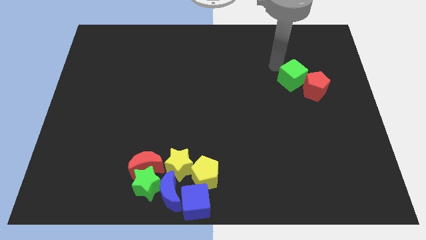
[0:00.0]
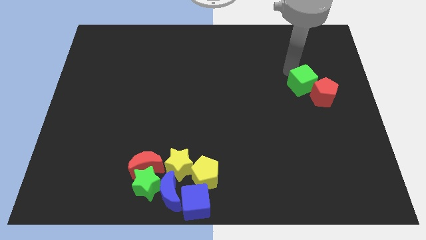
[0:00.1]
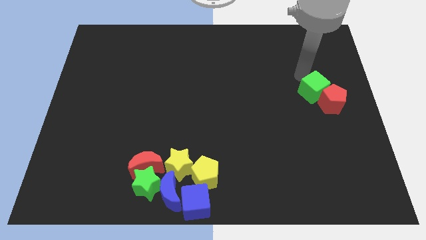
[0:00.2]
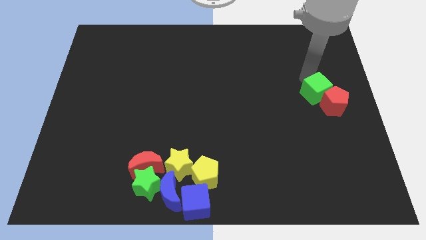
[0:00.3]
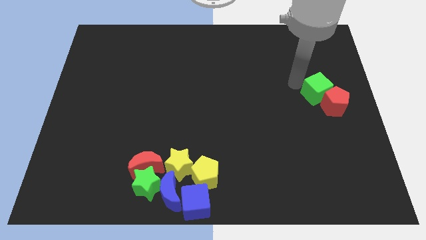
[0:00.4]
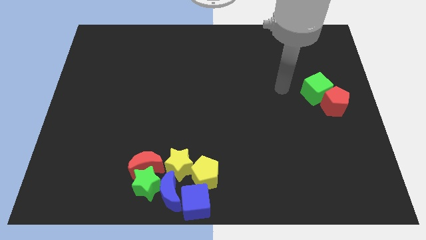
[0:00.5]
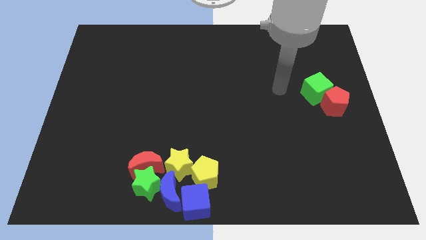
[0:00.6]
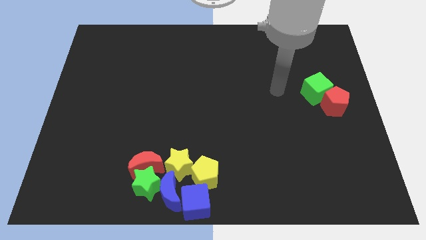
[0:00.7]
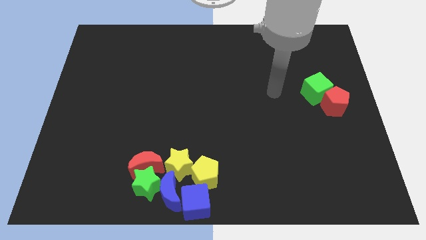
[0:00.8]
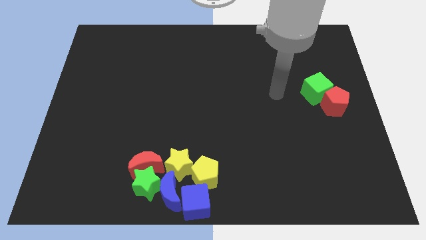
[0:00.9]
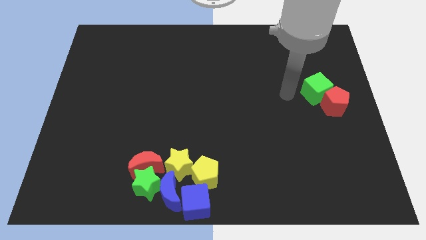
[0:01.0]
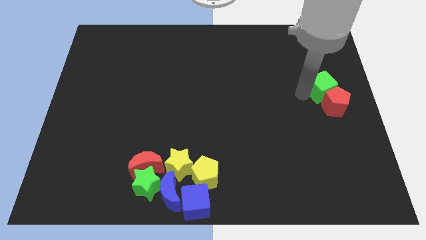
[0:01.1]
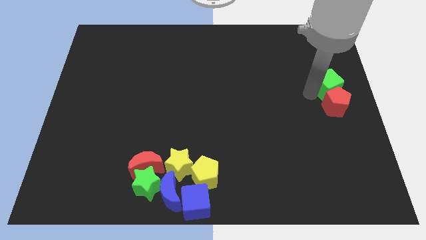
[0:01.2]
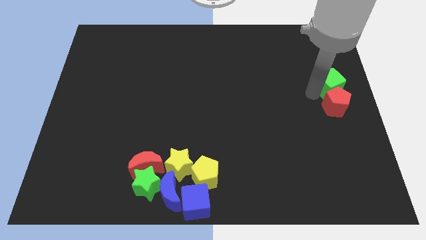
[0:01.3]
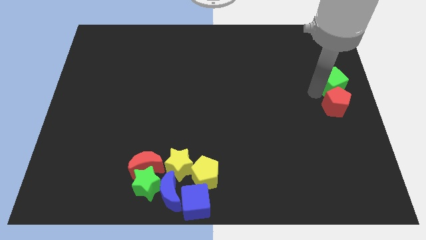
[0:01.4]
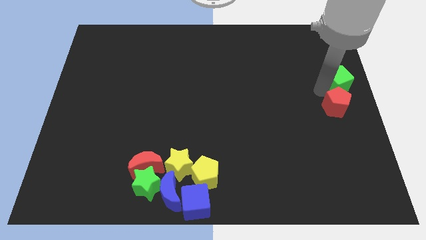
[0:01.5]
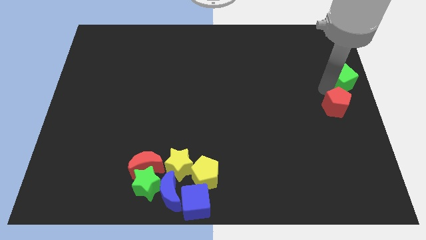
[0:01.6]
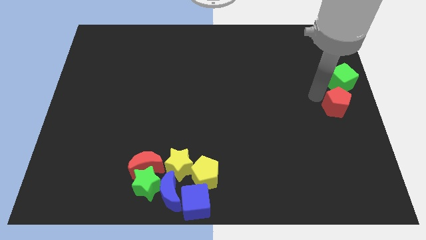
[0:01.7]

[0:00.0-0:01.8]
push the green cube towards the right center of the board

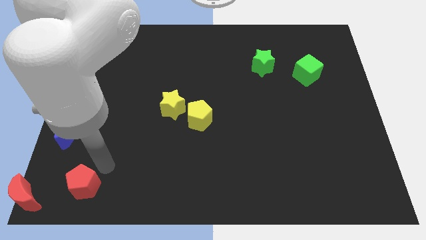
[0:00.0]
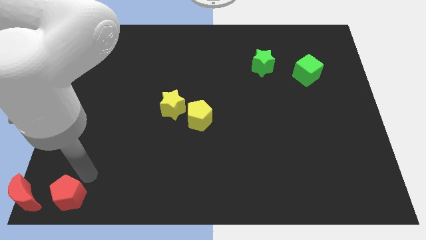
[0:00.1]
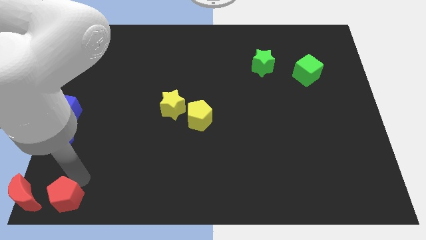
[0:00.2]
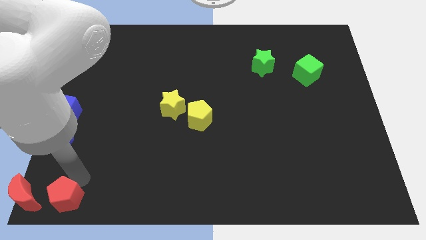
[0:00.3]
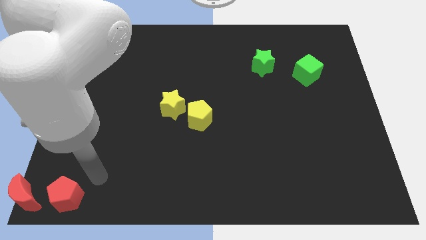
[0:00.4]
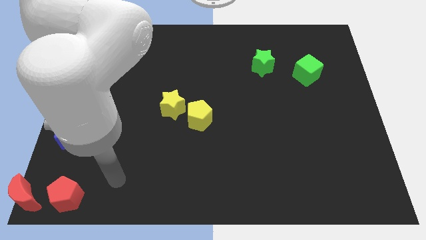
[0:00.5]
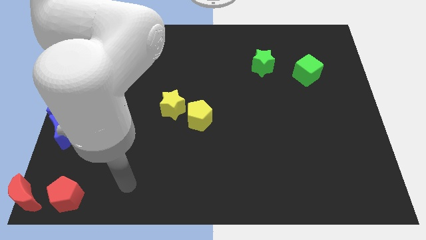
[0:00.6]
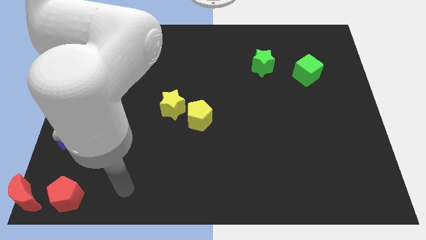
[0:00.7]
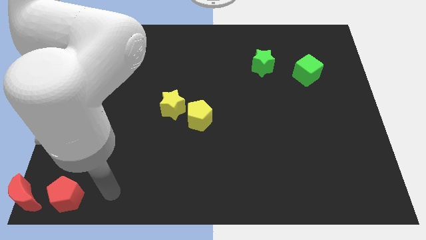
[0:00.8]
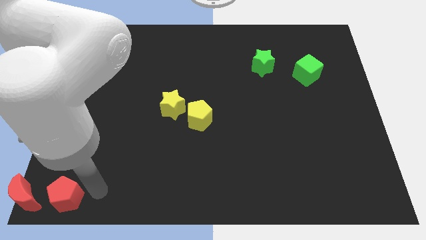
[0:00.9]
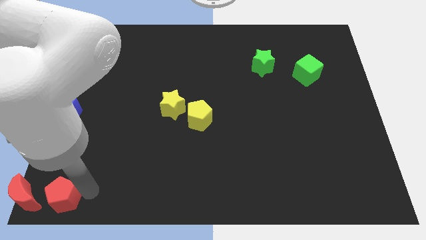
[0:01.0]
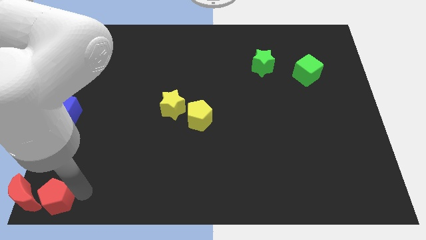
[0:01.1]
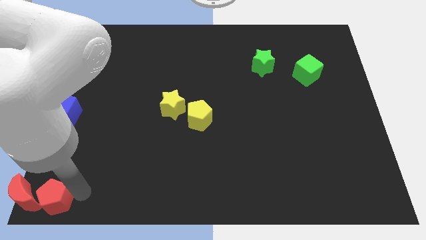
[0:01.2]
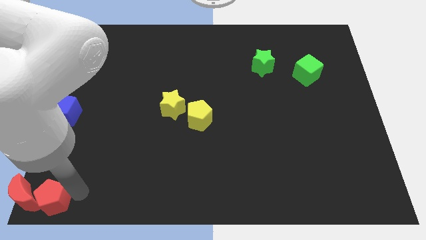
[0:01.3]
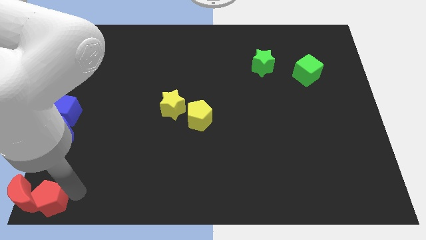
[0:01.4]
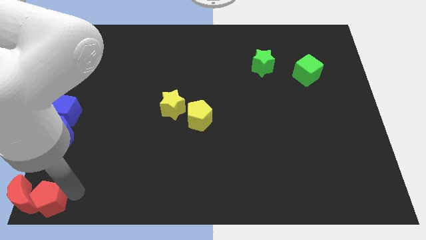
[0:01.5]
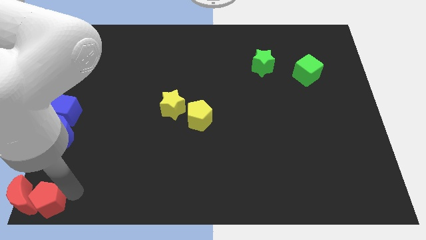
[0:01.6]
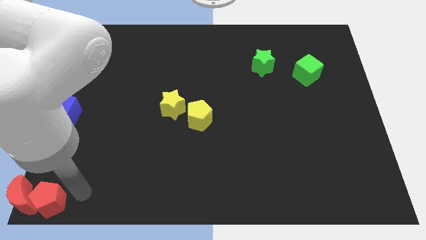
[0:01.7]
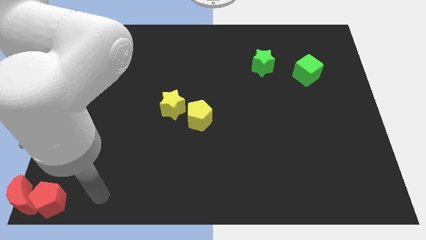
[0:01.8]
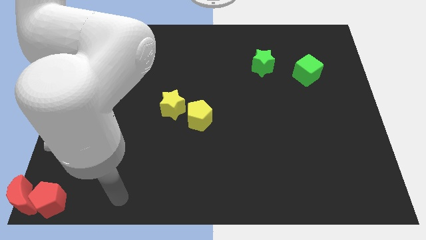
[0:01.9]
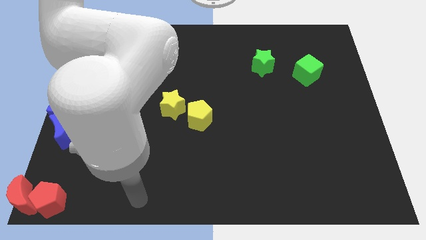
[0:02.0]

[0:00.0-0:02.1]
move red pentagon into the red crescent

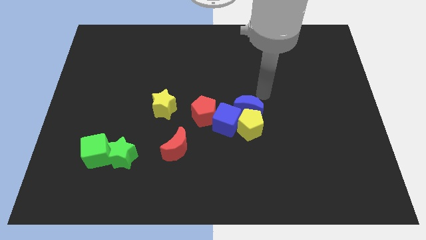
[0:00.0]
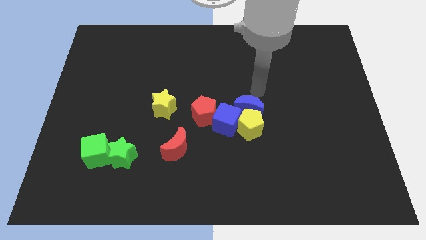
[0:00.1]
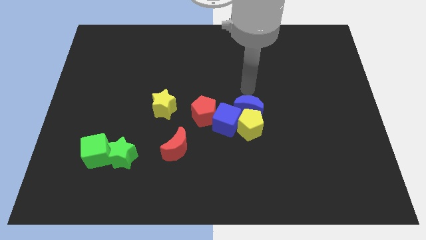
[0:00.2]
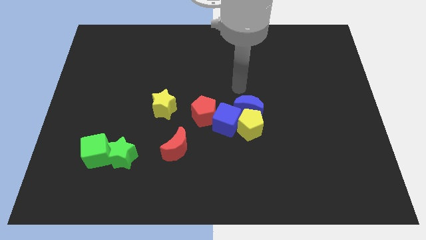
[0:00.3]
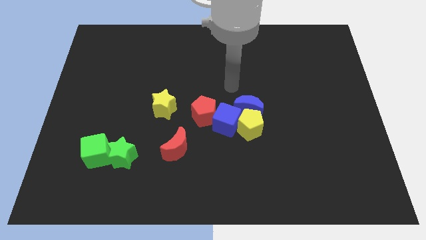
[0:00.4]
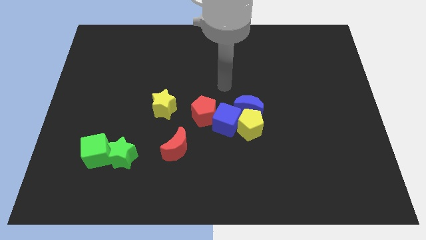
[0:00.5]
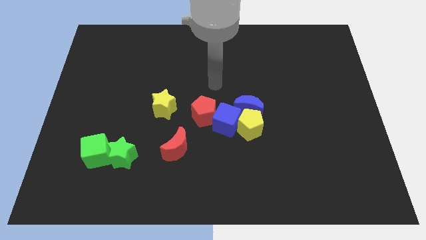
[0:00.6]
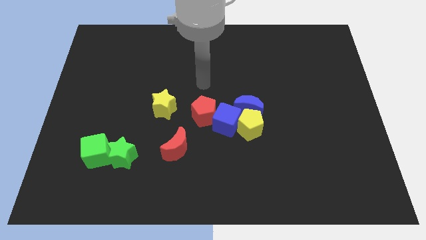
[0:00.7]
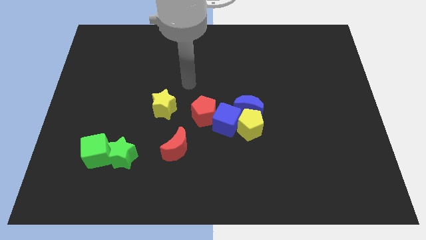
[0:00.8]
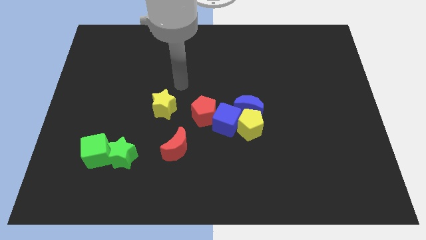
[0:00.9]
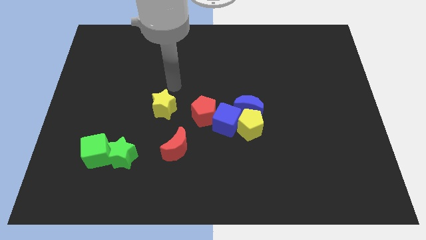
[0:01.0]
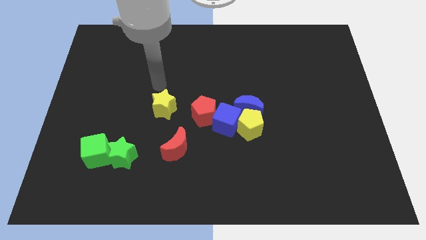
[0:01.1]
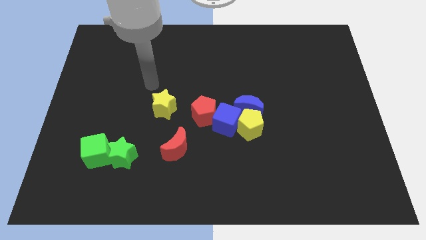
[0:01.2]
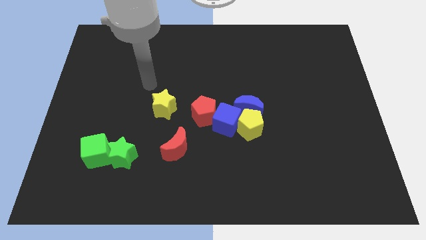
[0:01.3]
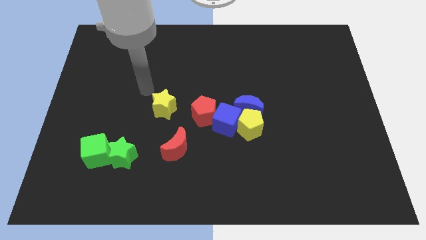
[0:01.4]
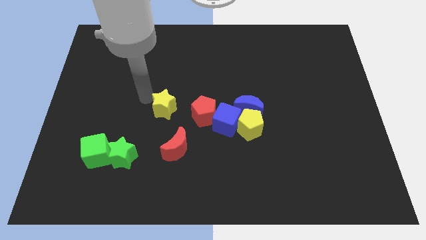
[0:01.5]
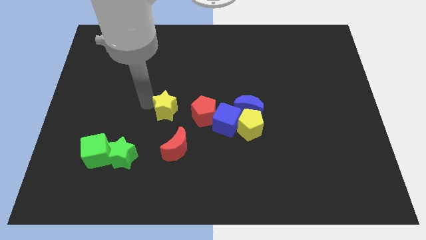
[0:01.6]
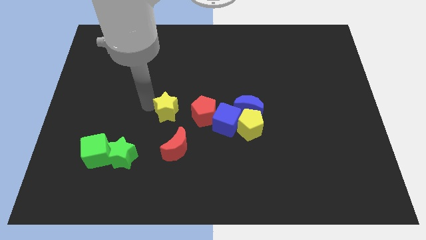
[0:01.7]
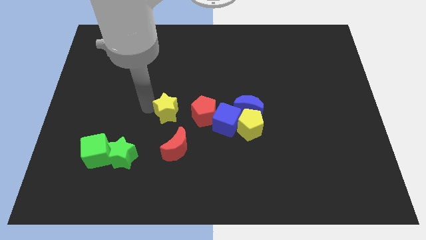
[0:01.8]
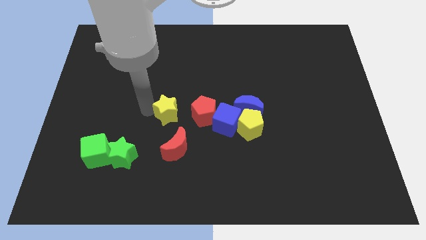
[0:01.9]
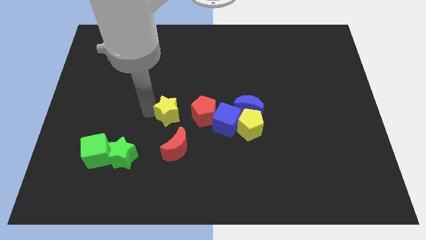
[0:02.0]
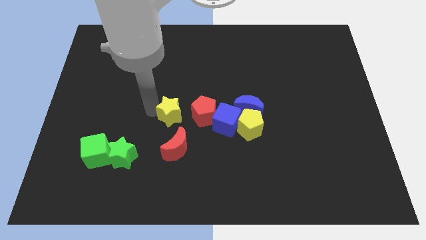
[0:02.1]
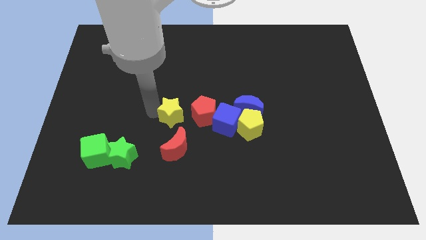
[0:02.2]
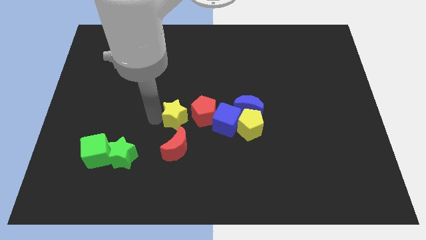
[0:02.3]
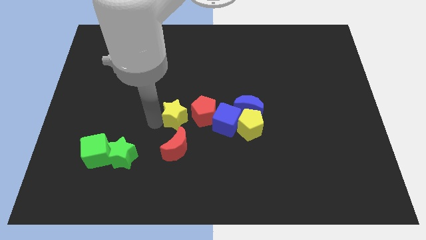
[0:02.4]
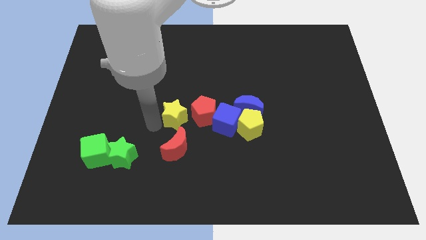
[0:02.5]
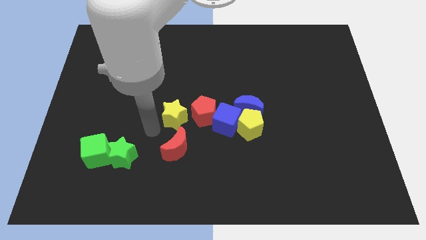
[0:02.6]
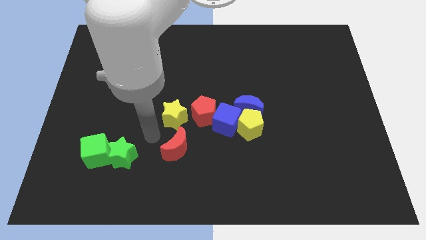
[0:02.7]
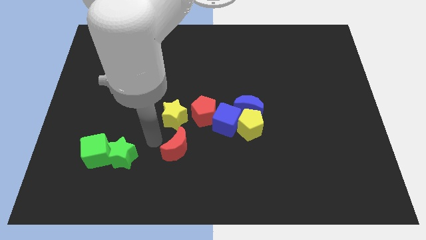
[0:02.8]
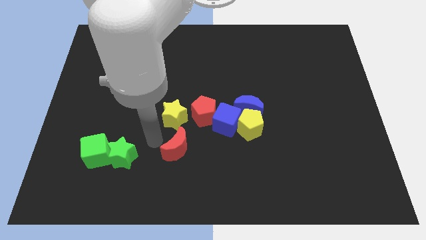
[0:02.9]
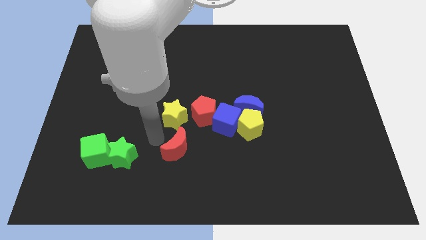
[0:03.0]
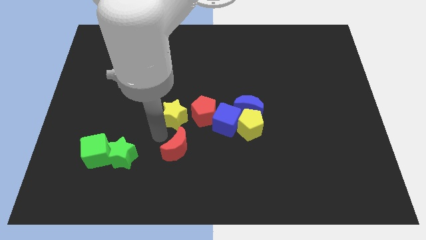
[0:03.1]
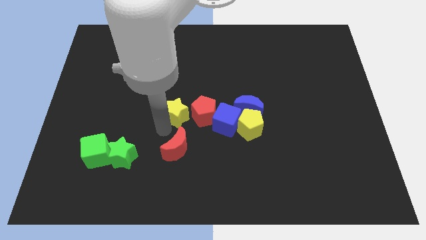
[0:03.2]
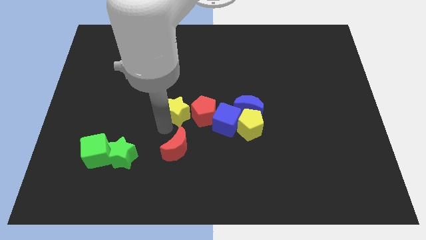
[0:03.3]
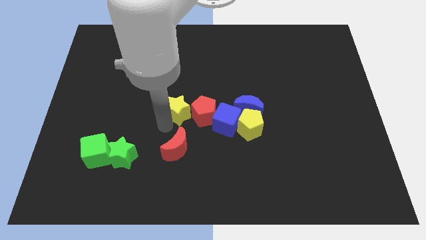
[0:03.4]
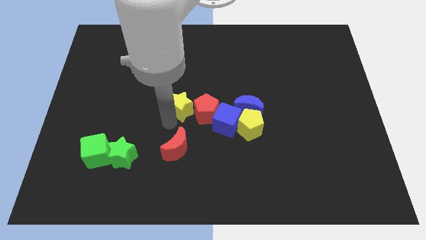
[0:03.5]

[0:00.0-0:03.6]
move the yellow star into the left of the red pentagon

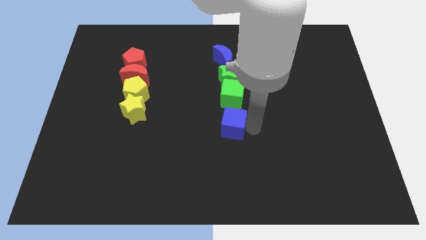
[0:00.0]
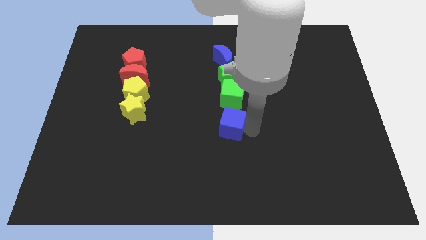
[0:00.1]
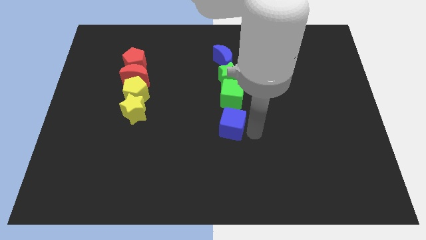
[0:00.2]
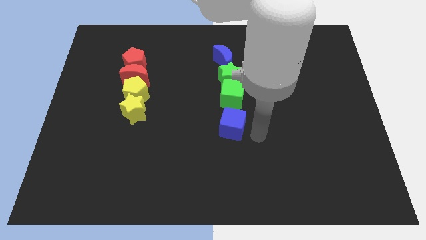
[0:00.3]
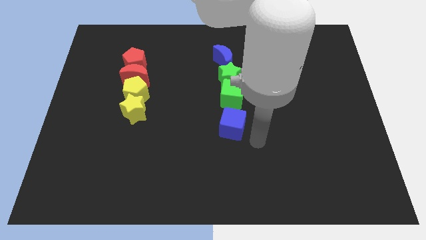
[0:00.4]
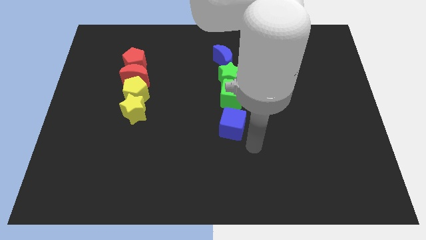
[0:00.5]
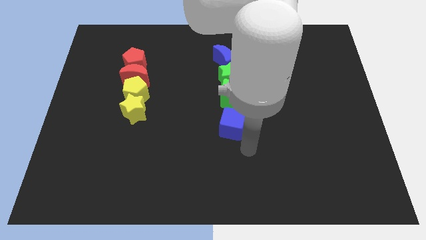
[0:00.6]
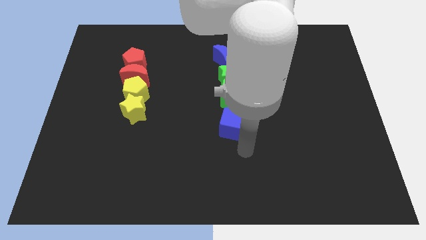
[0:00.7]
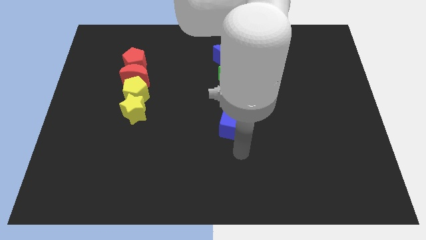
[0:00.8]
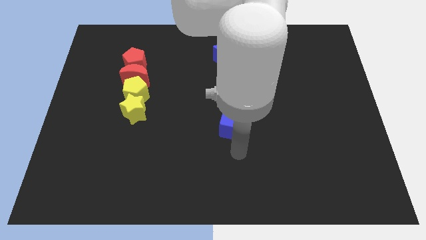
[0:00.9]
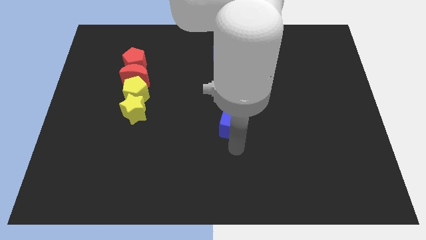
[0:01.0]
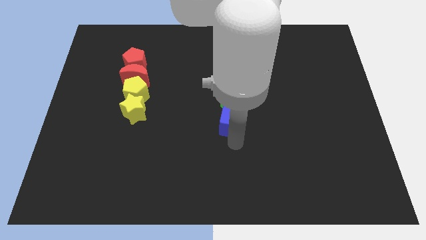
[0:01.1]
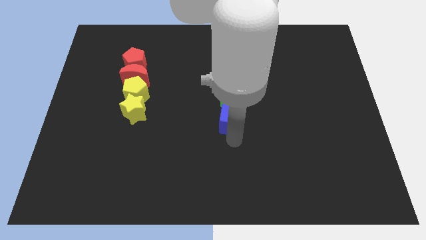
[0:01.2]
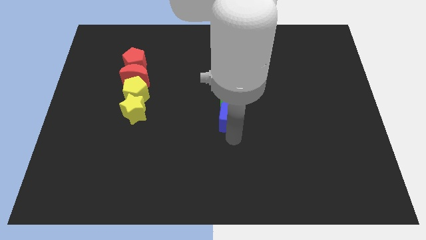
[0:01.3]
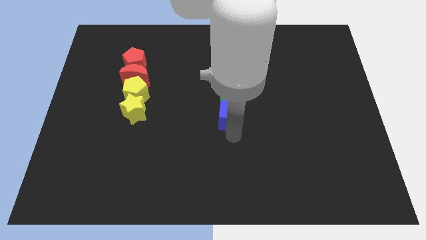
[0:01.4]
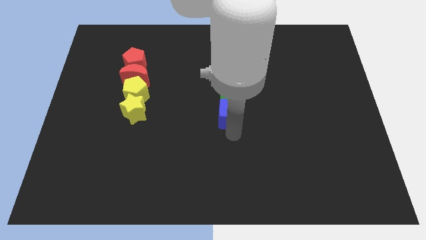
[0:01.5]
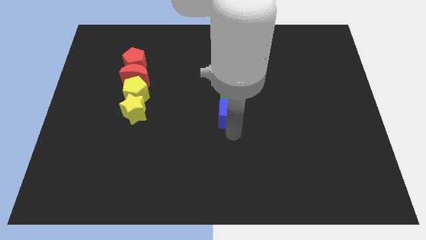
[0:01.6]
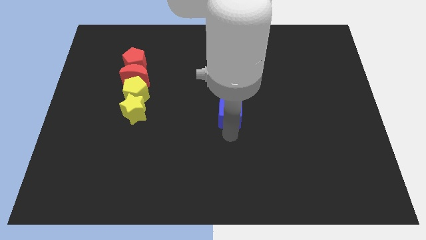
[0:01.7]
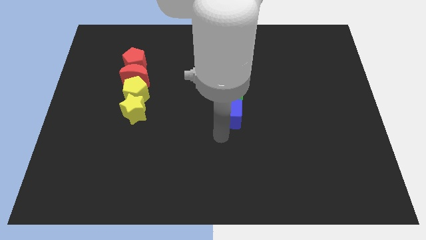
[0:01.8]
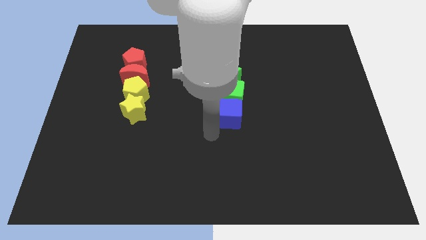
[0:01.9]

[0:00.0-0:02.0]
slide the blue cube into the green cube
